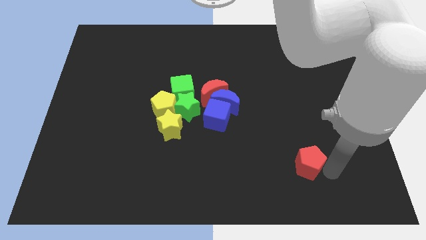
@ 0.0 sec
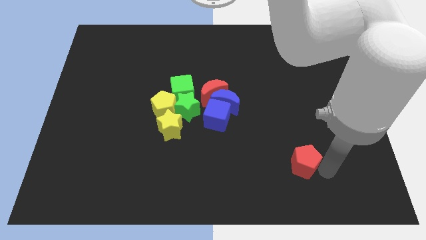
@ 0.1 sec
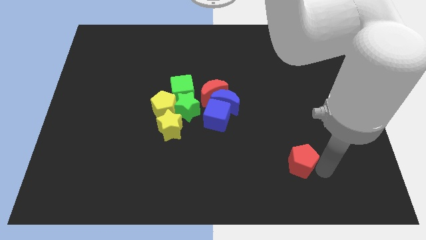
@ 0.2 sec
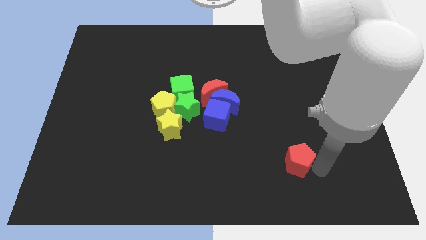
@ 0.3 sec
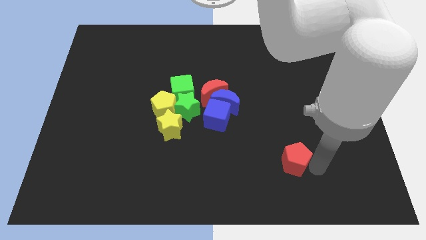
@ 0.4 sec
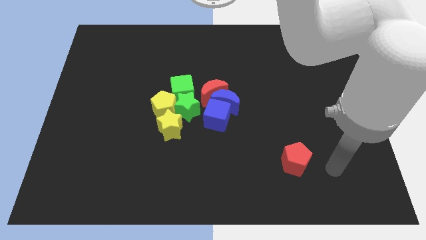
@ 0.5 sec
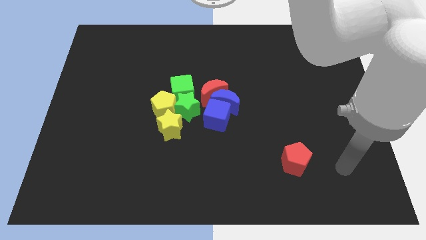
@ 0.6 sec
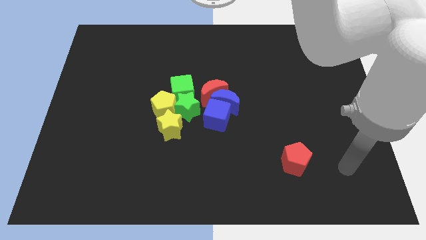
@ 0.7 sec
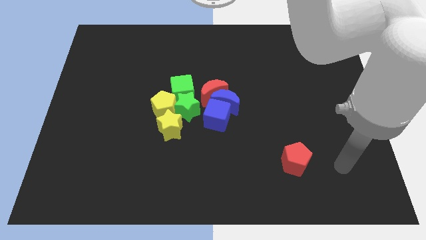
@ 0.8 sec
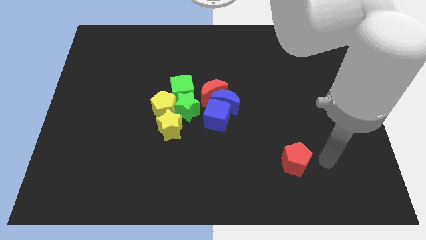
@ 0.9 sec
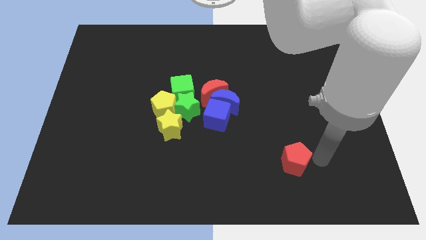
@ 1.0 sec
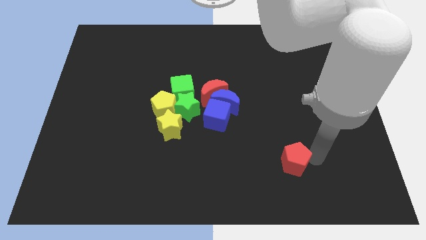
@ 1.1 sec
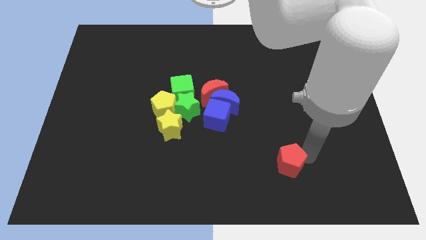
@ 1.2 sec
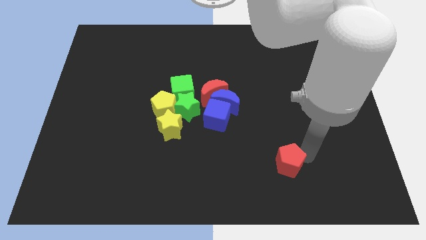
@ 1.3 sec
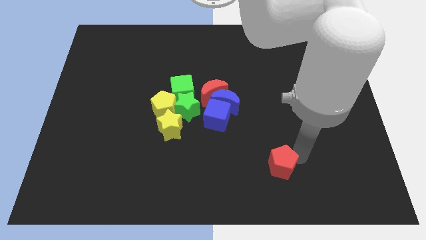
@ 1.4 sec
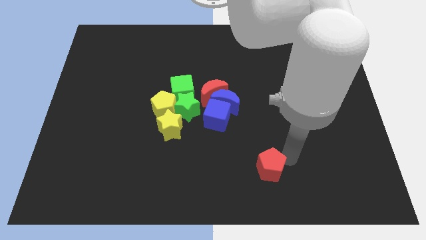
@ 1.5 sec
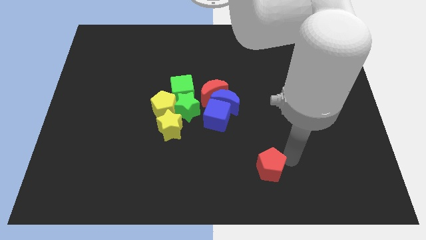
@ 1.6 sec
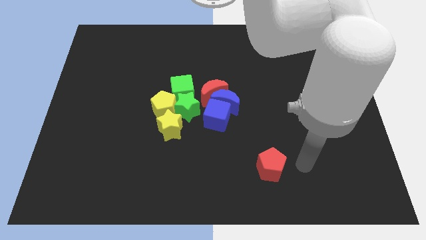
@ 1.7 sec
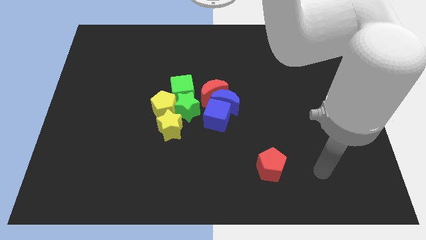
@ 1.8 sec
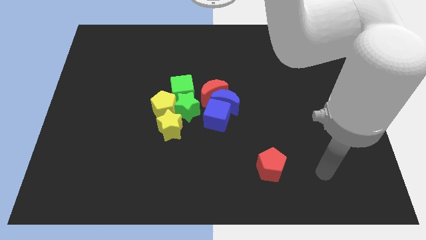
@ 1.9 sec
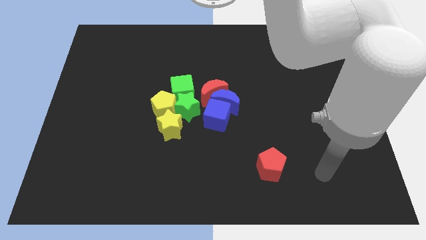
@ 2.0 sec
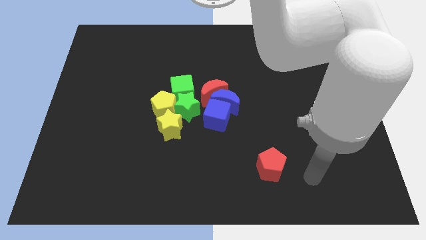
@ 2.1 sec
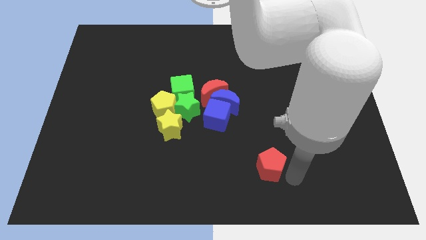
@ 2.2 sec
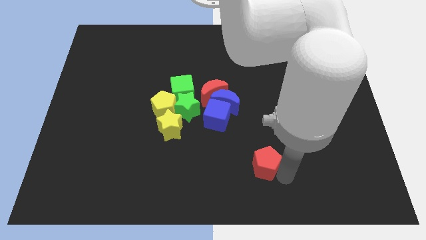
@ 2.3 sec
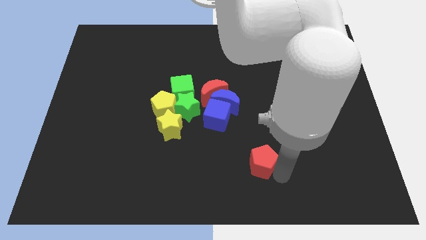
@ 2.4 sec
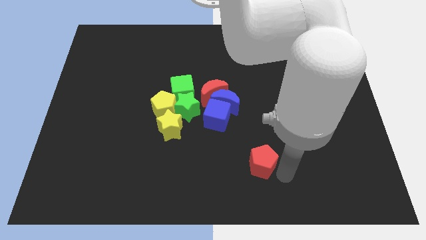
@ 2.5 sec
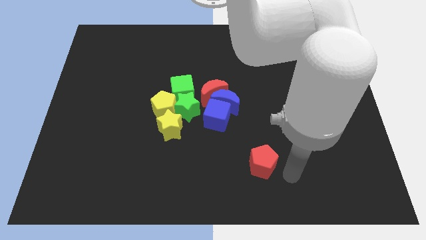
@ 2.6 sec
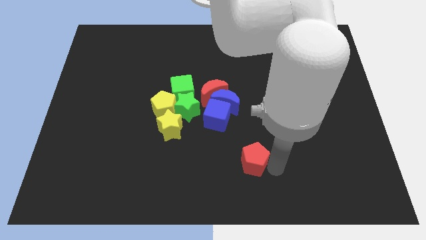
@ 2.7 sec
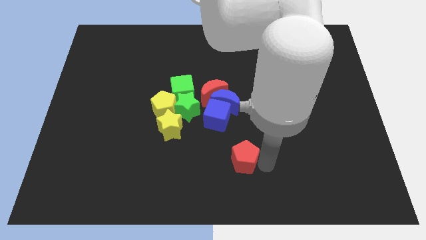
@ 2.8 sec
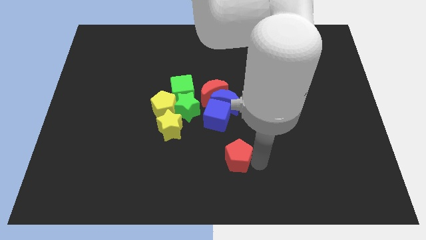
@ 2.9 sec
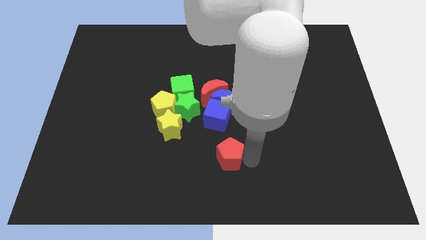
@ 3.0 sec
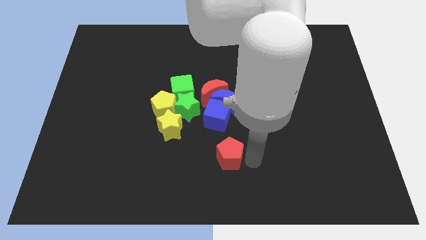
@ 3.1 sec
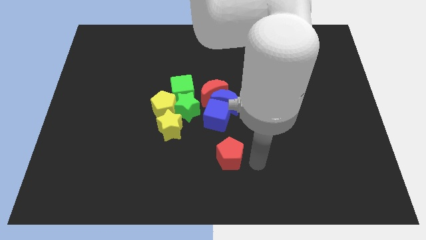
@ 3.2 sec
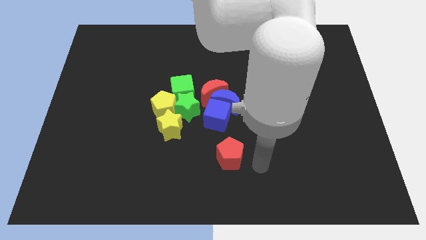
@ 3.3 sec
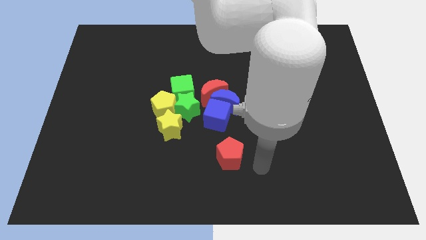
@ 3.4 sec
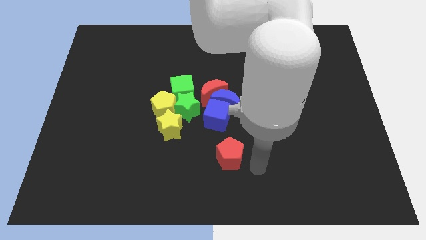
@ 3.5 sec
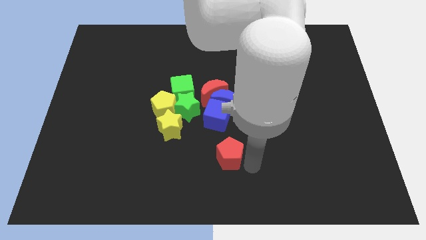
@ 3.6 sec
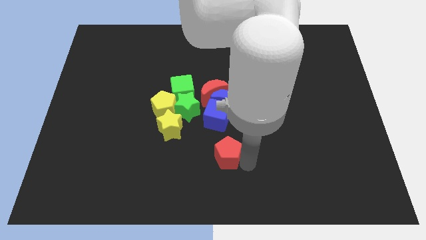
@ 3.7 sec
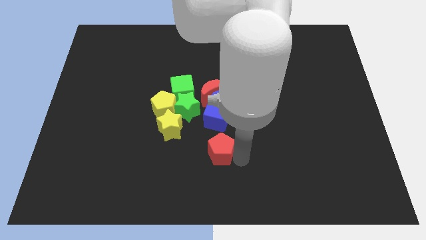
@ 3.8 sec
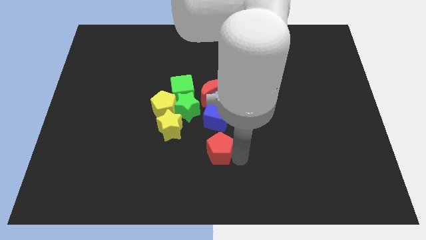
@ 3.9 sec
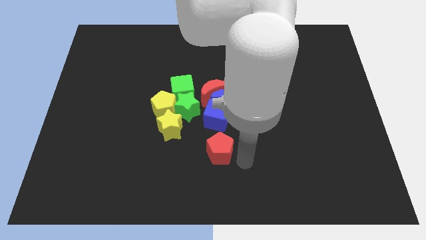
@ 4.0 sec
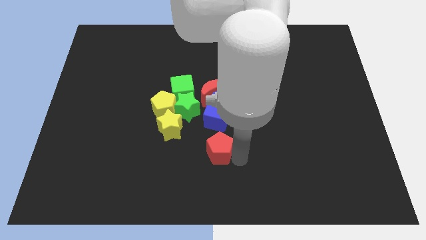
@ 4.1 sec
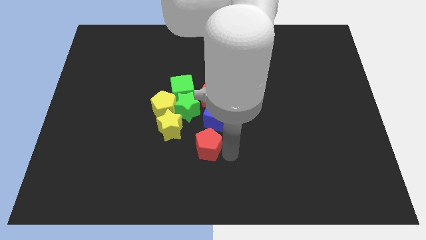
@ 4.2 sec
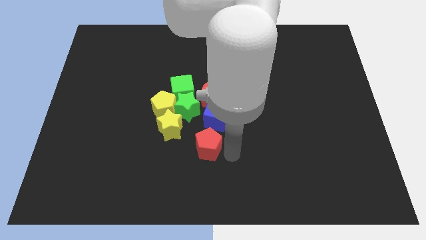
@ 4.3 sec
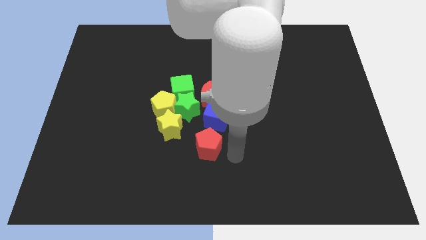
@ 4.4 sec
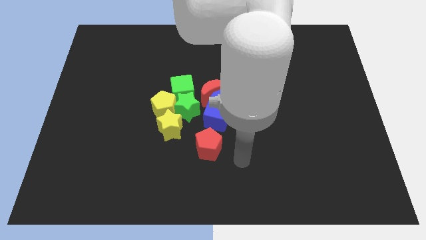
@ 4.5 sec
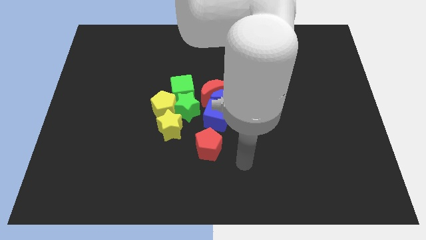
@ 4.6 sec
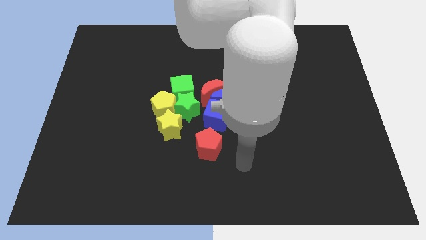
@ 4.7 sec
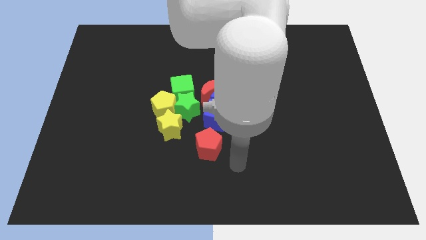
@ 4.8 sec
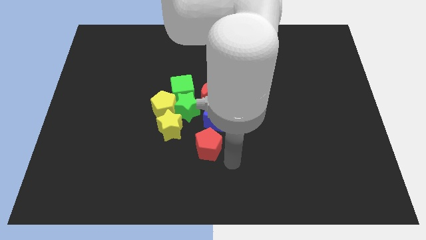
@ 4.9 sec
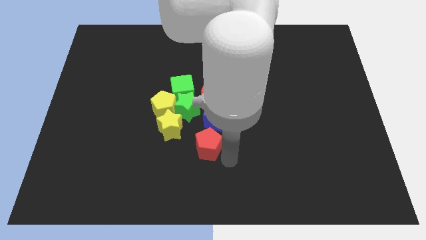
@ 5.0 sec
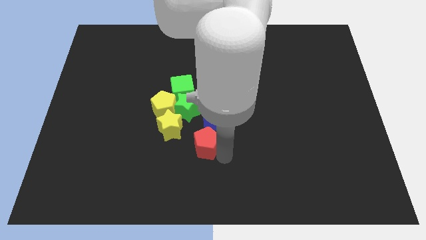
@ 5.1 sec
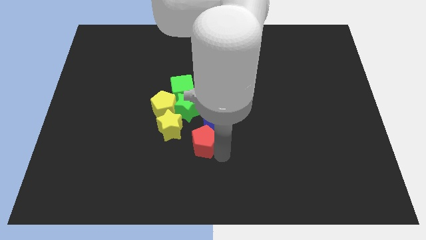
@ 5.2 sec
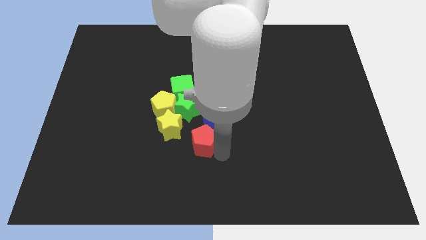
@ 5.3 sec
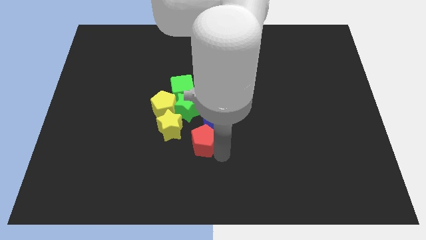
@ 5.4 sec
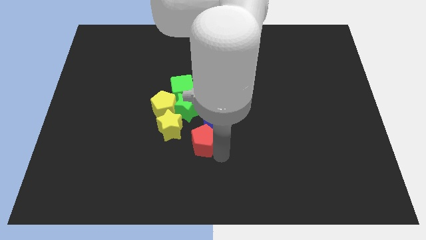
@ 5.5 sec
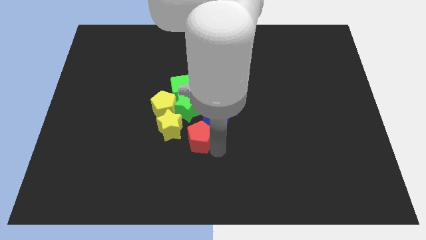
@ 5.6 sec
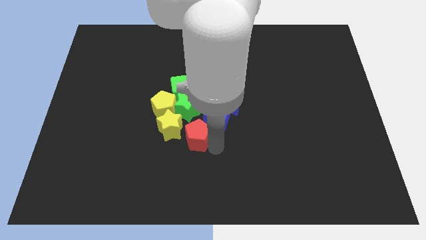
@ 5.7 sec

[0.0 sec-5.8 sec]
push the red pentagon to the group of blocks

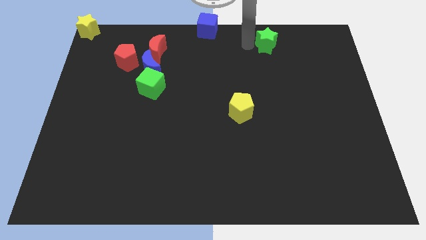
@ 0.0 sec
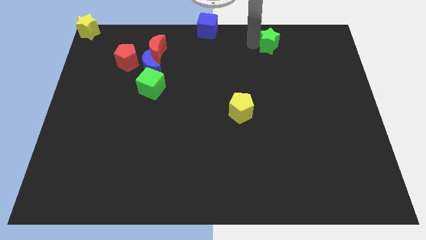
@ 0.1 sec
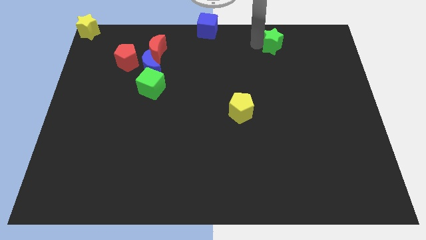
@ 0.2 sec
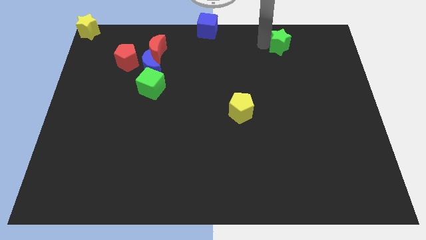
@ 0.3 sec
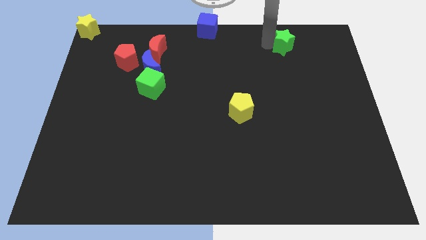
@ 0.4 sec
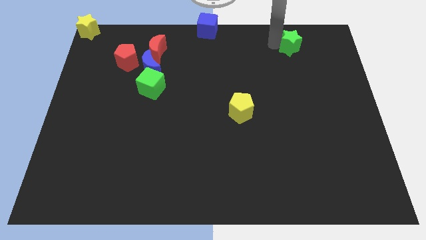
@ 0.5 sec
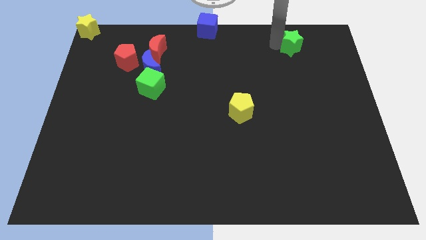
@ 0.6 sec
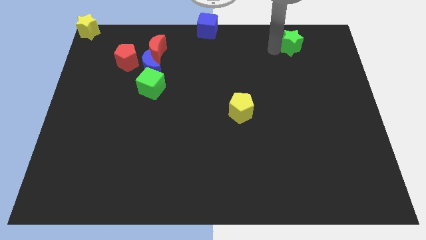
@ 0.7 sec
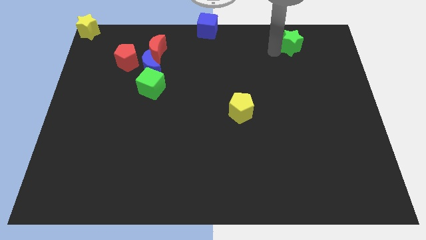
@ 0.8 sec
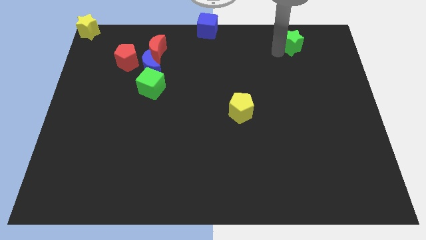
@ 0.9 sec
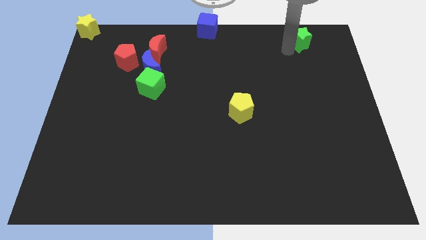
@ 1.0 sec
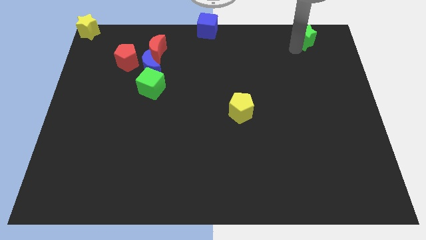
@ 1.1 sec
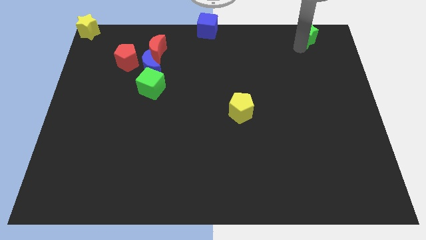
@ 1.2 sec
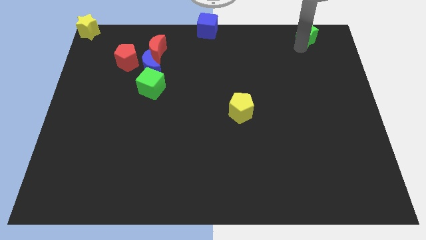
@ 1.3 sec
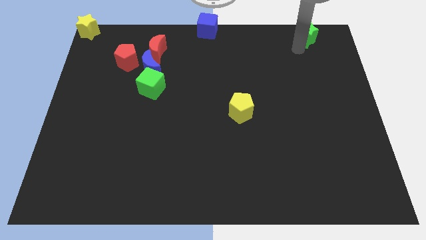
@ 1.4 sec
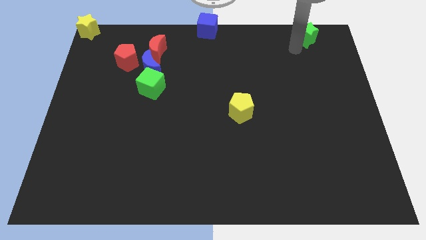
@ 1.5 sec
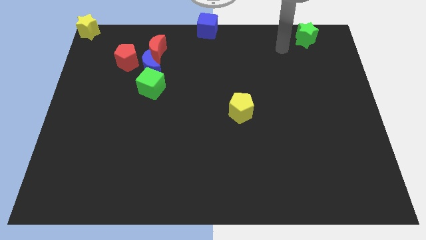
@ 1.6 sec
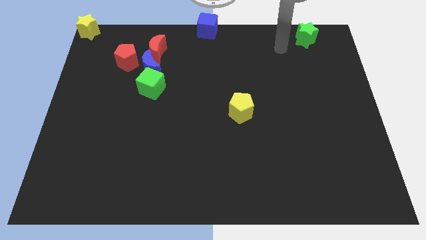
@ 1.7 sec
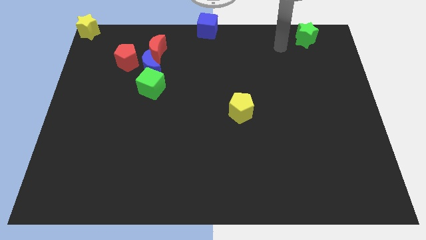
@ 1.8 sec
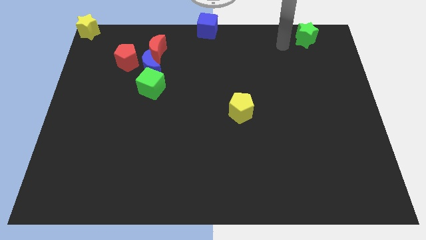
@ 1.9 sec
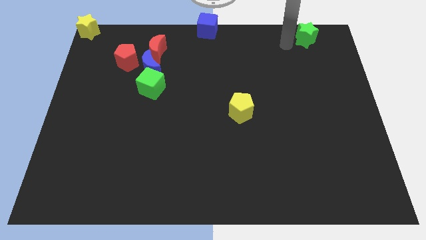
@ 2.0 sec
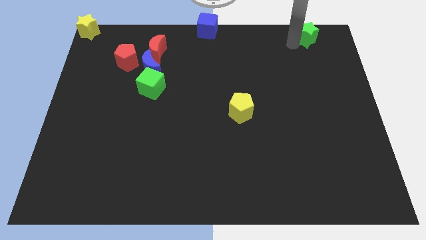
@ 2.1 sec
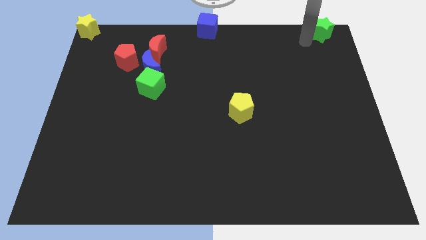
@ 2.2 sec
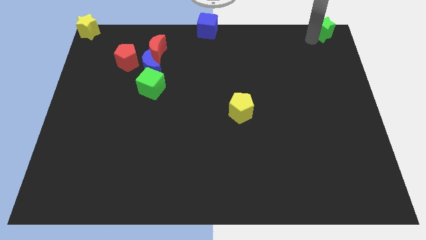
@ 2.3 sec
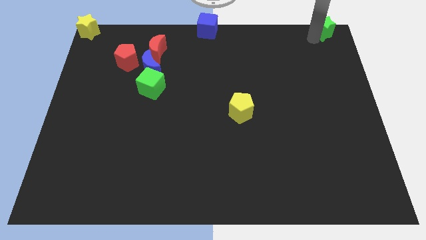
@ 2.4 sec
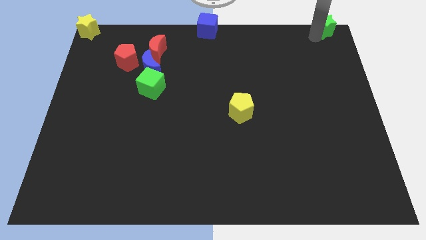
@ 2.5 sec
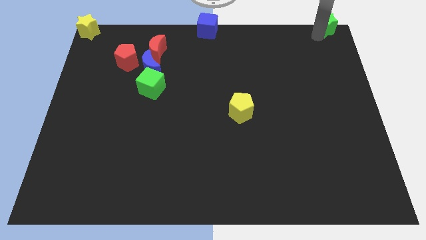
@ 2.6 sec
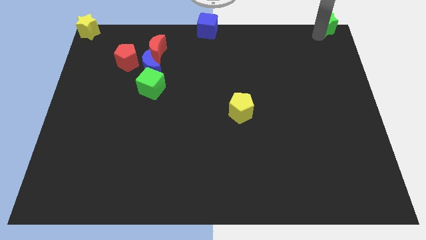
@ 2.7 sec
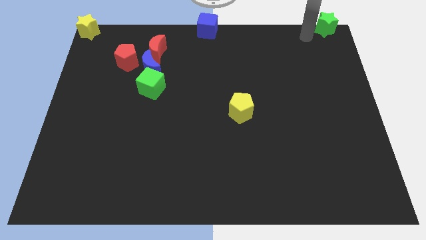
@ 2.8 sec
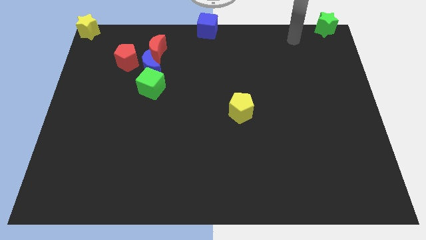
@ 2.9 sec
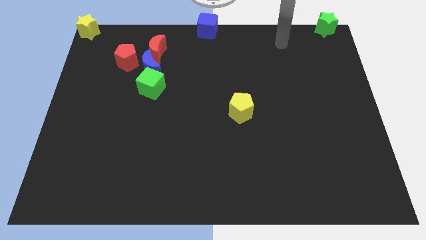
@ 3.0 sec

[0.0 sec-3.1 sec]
push green star towards top right of the board

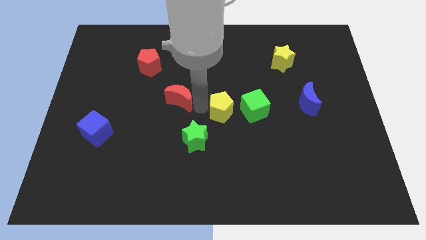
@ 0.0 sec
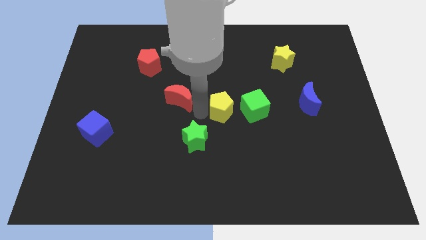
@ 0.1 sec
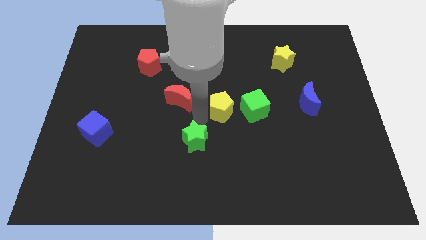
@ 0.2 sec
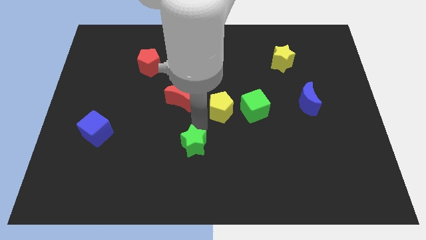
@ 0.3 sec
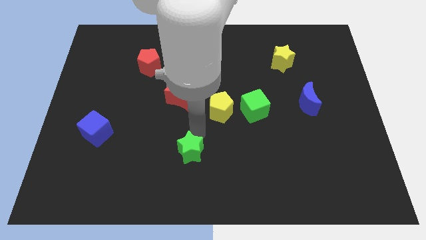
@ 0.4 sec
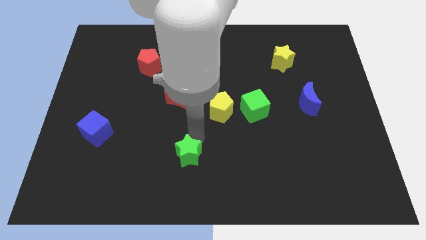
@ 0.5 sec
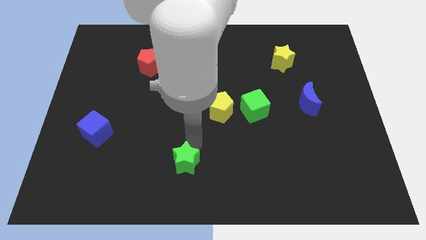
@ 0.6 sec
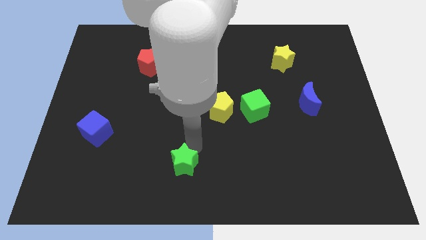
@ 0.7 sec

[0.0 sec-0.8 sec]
push the green star slightly to the bottom
